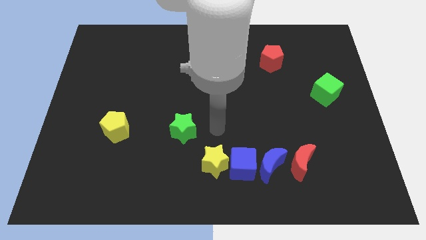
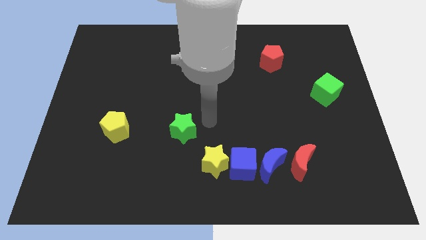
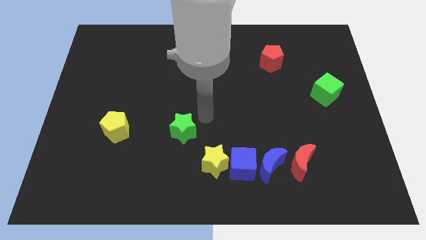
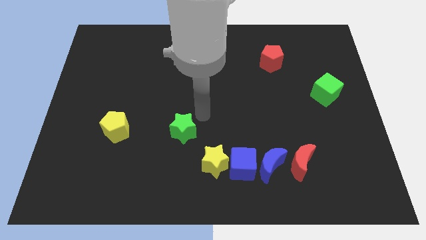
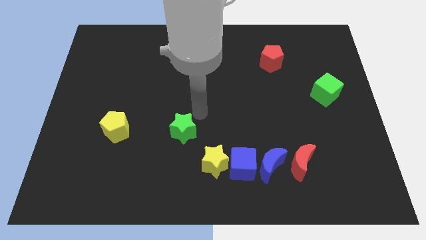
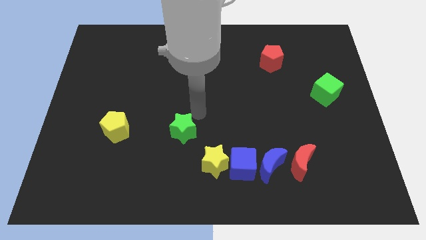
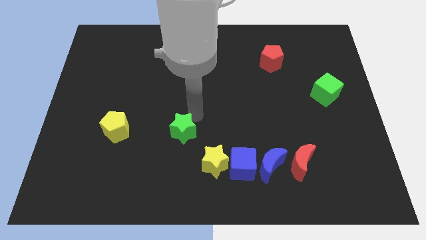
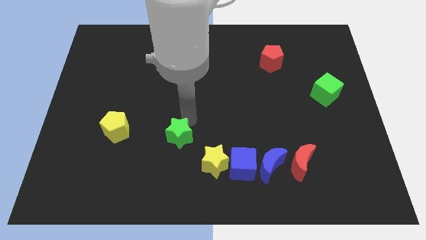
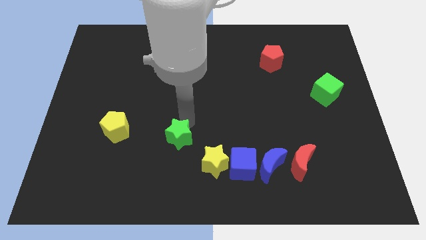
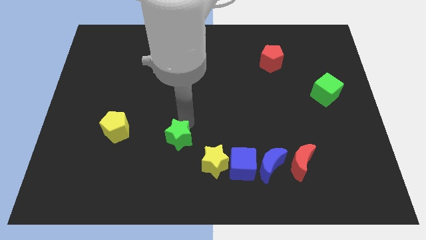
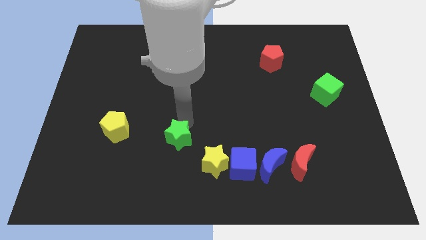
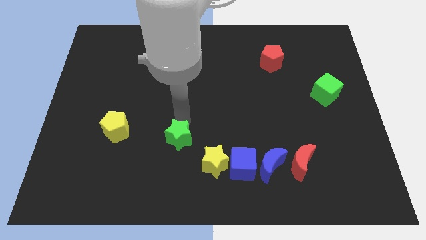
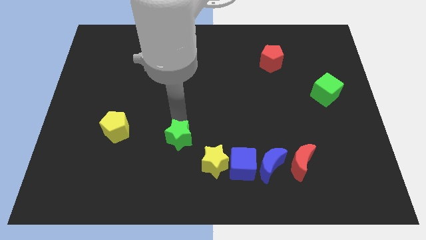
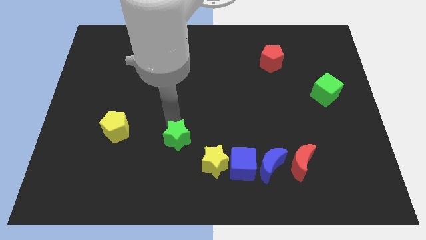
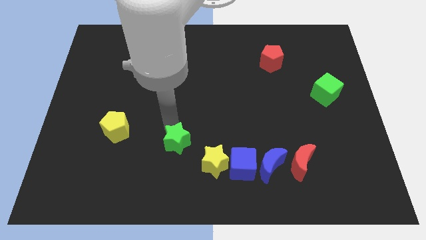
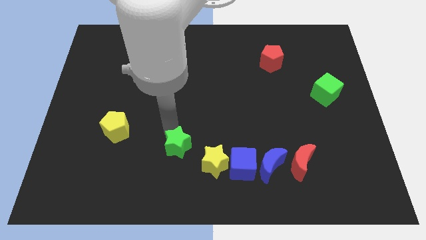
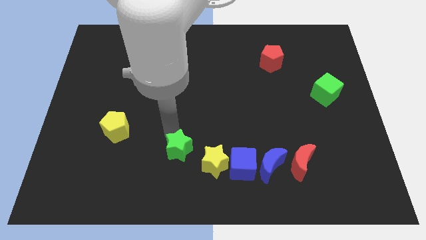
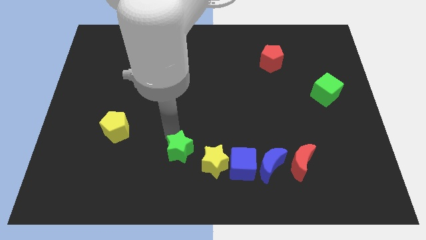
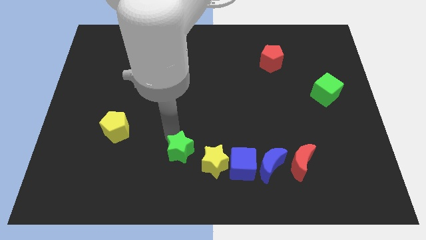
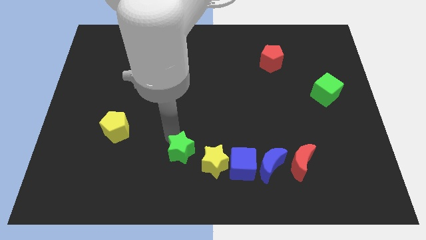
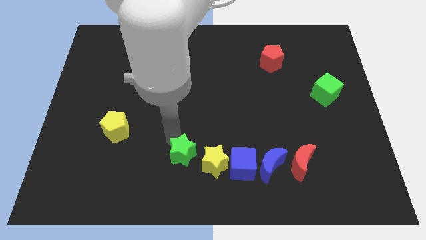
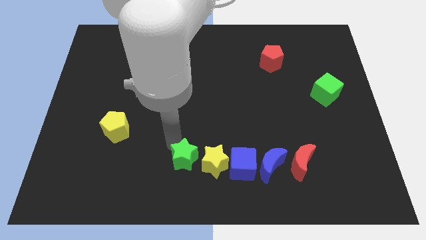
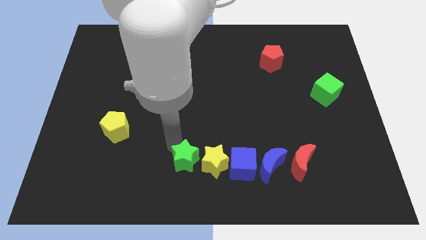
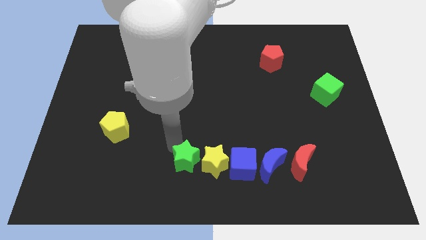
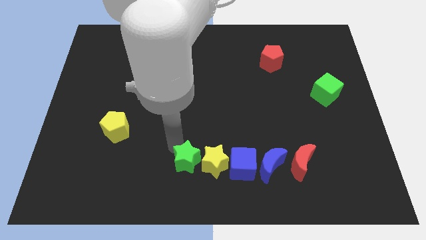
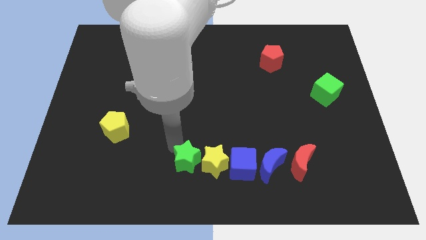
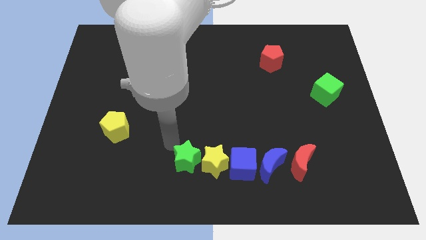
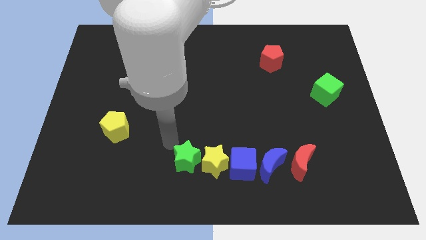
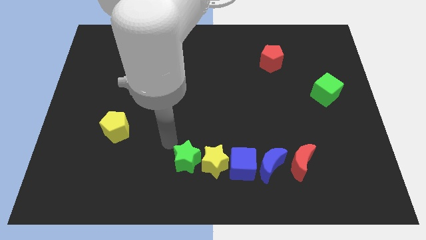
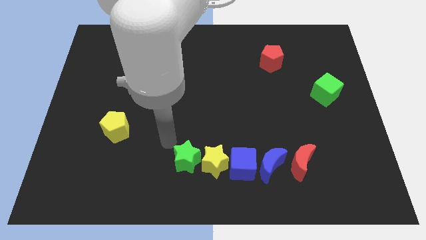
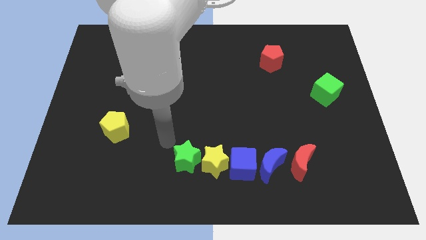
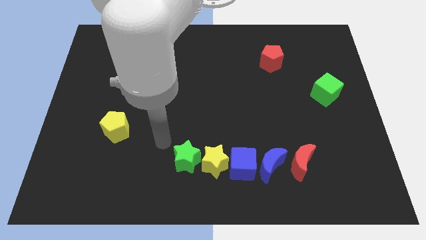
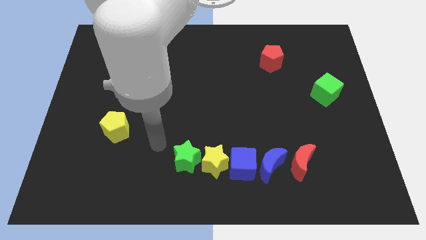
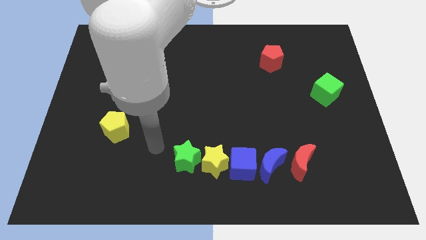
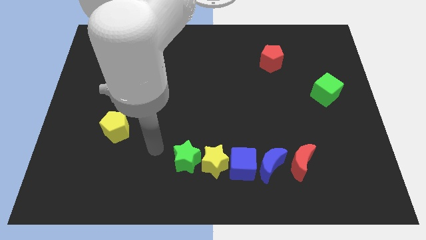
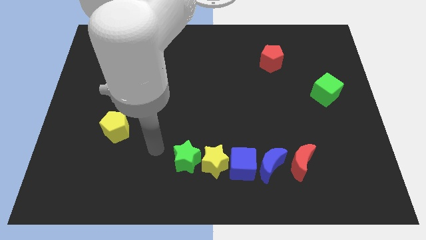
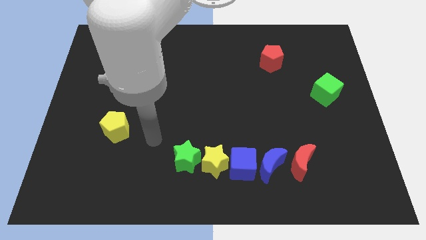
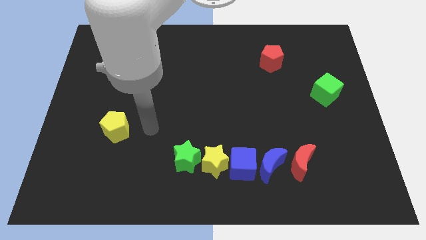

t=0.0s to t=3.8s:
slide green star to the left of the yellow star

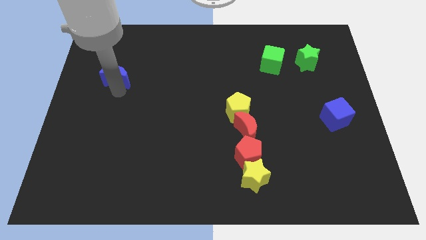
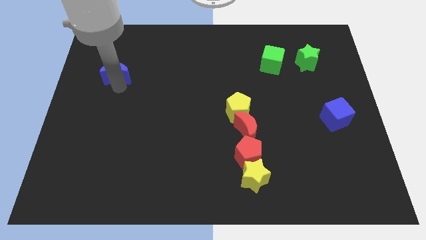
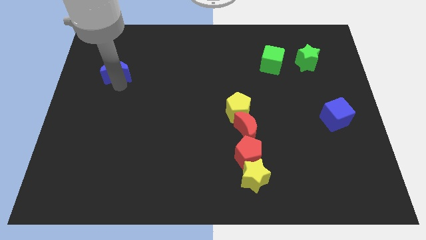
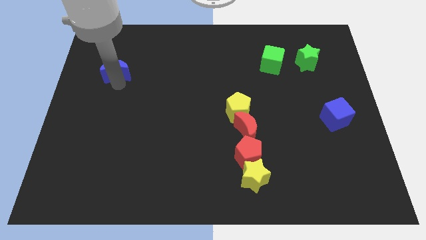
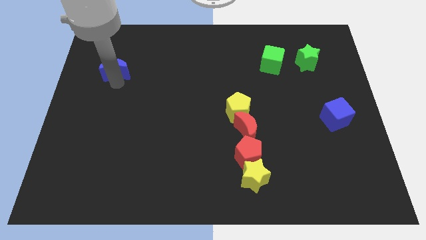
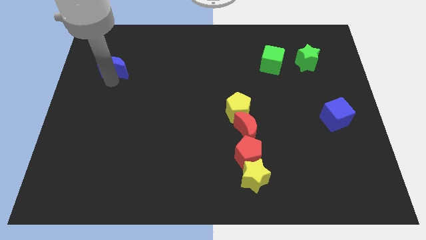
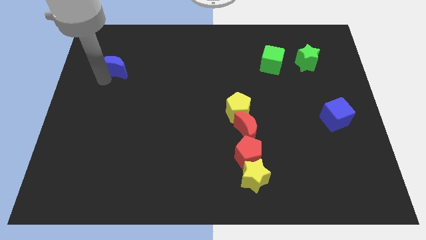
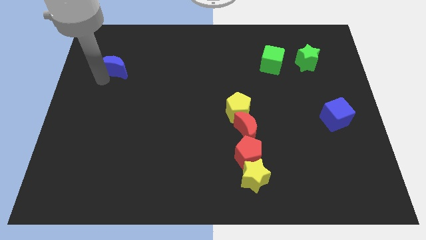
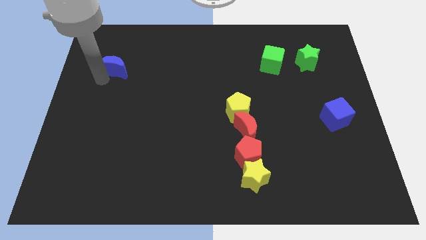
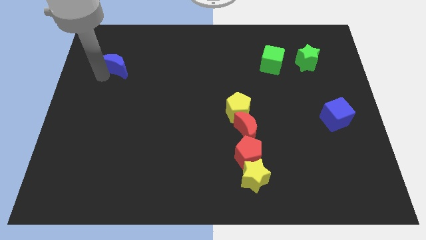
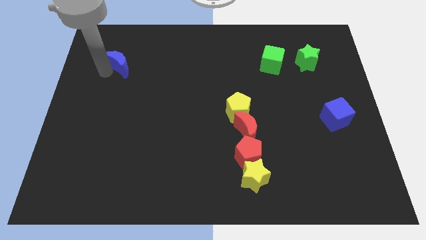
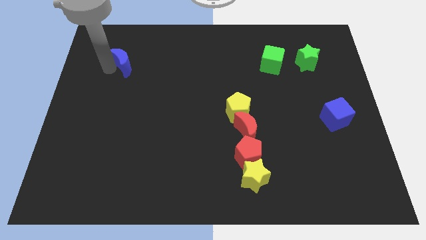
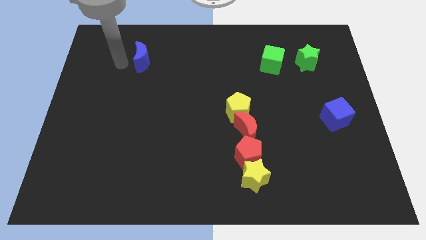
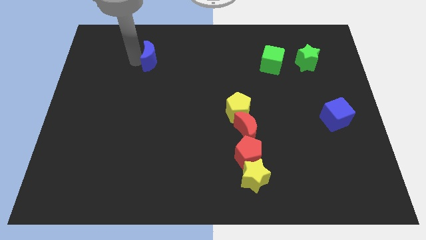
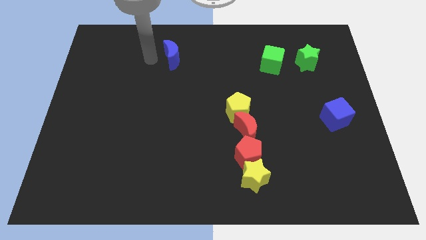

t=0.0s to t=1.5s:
drag the blue moon slightly to the right

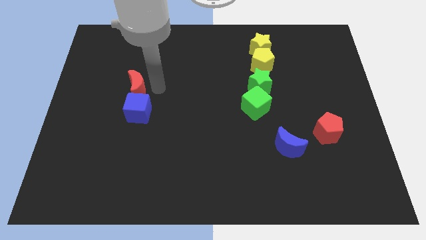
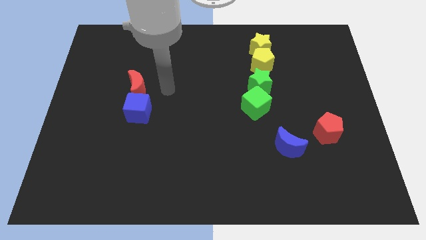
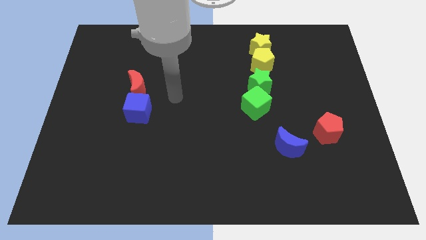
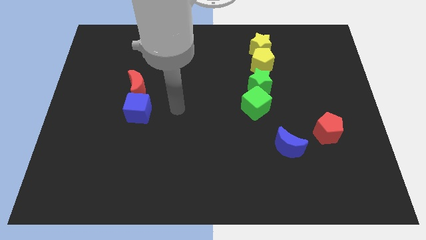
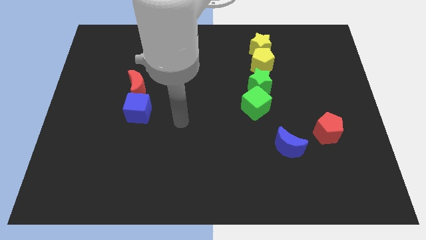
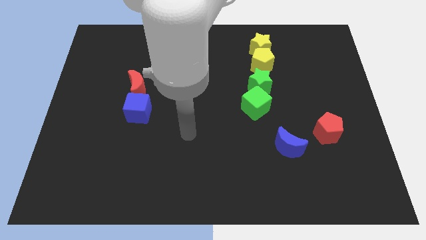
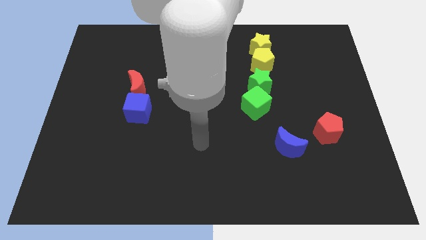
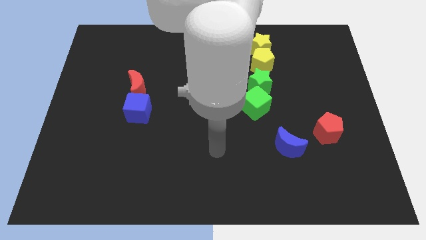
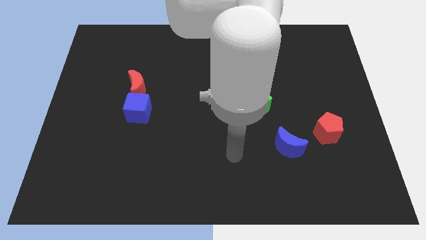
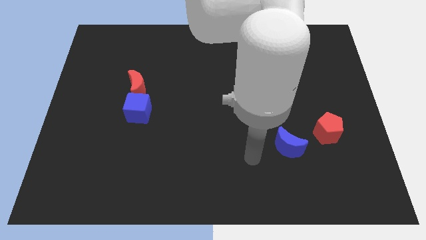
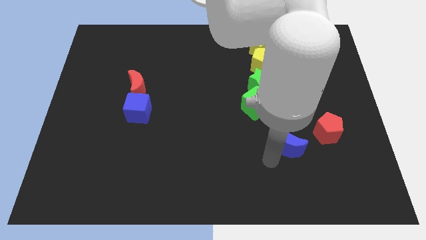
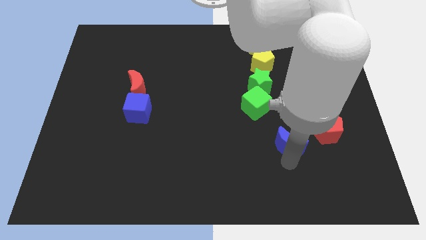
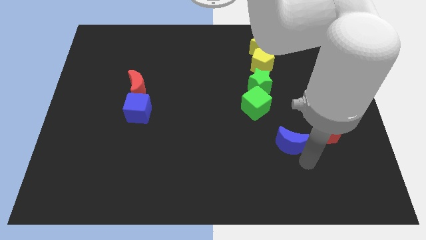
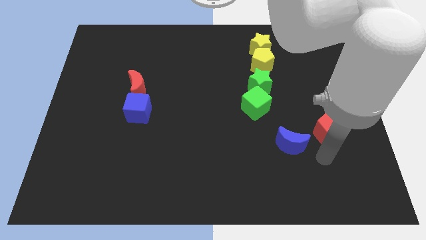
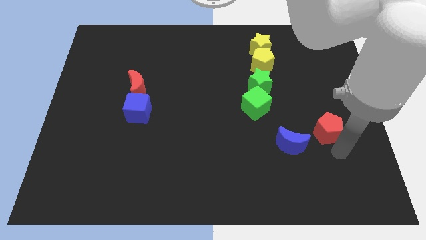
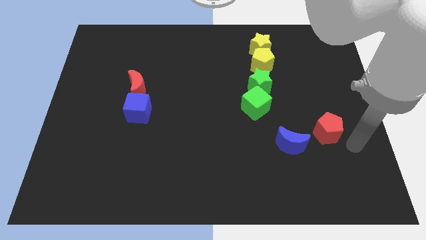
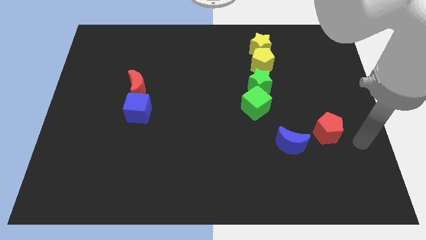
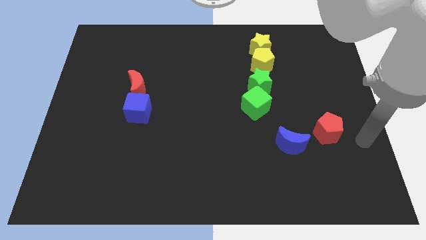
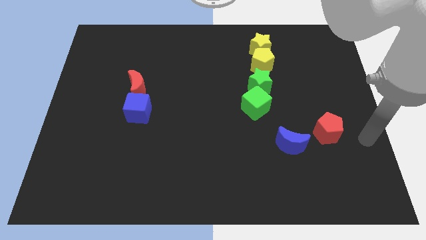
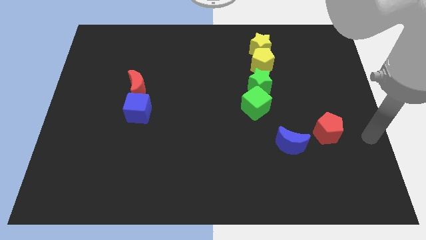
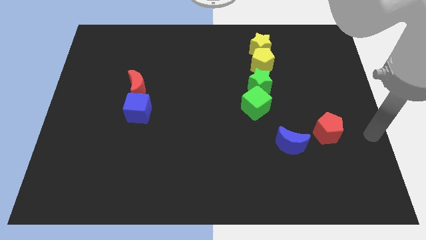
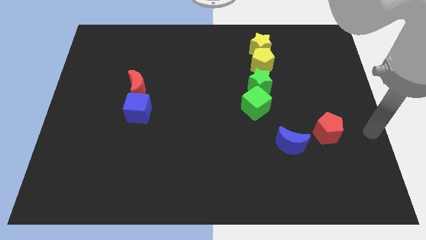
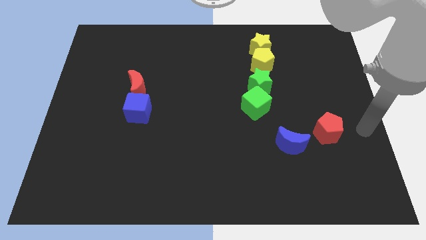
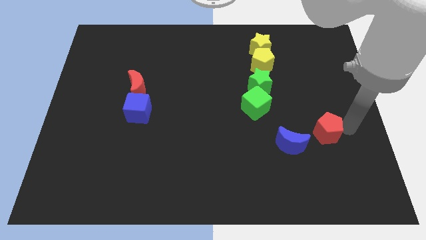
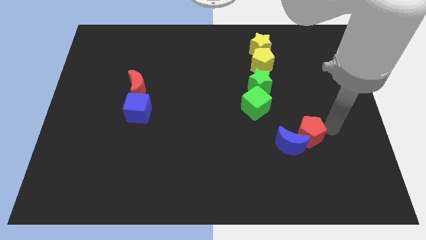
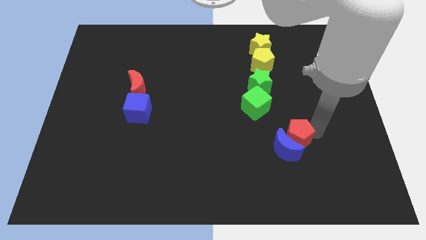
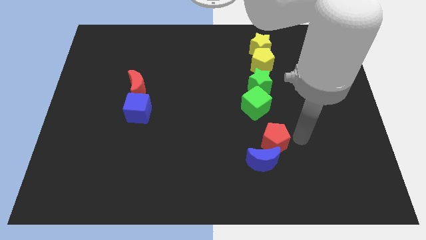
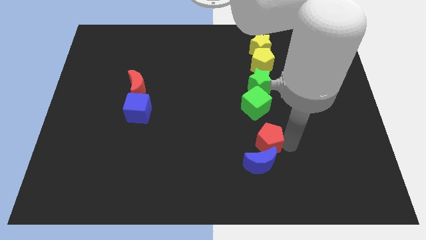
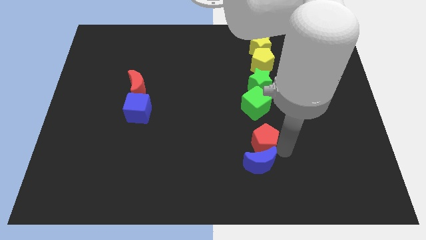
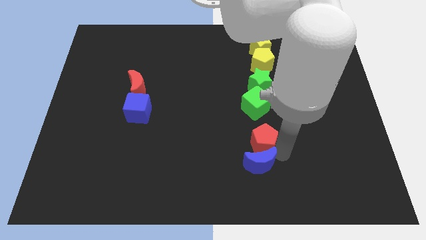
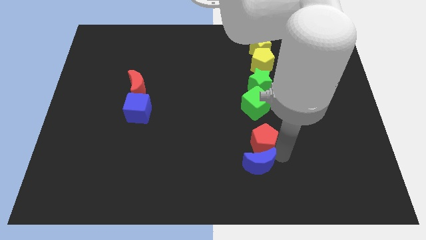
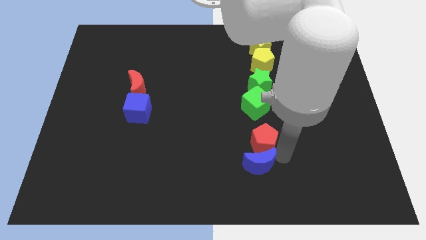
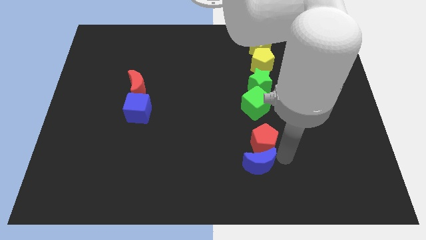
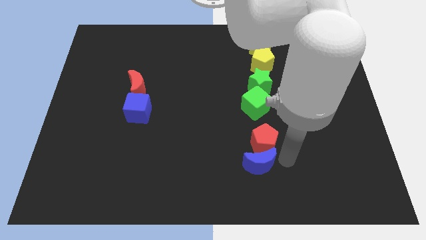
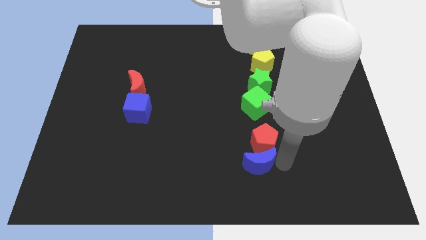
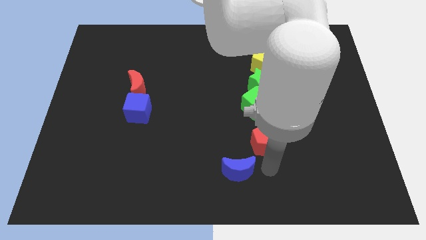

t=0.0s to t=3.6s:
place the red pentagon above the blue crescent
